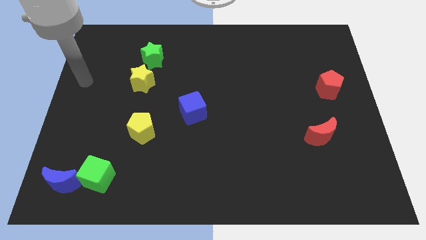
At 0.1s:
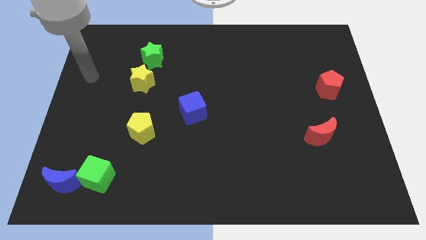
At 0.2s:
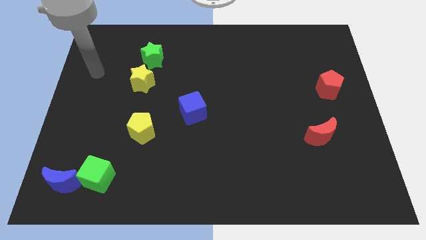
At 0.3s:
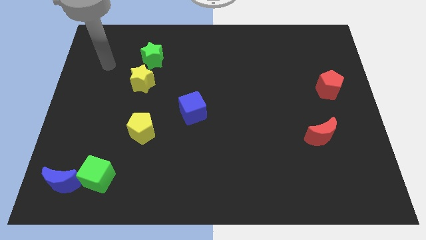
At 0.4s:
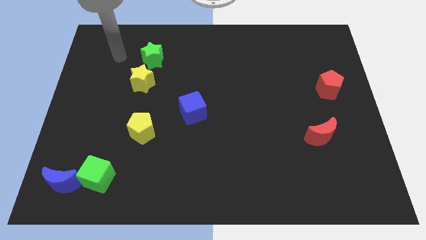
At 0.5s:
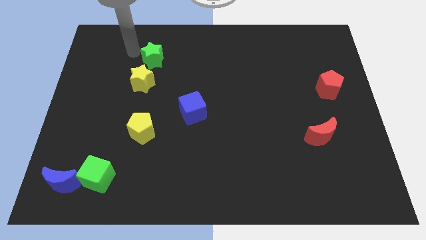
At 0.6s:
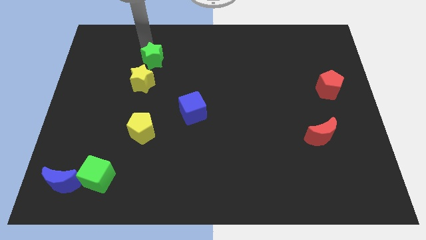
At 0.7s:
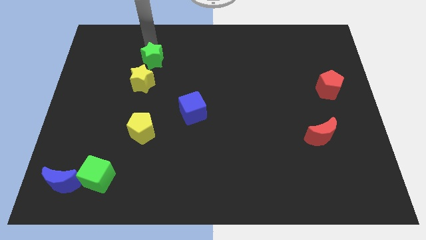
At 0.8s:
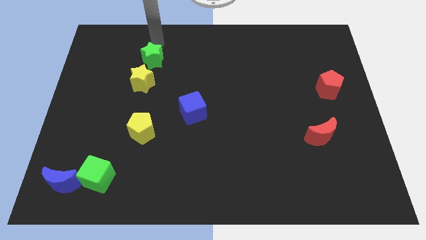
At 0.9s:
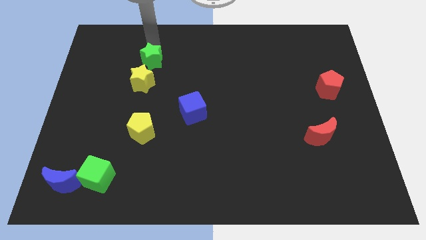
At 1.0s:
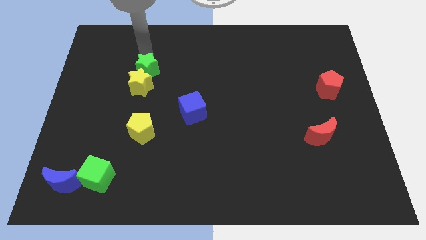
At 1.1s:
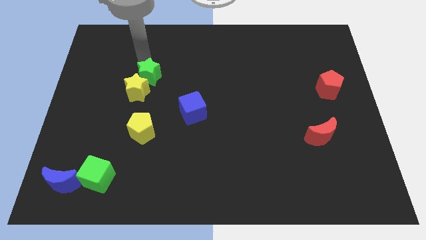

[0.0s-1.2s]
push the green star into the yellow star

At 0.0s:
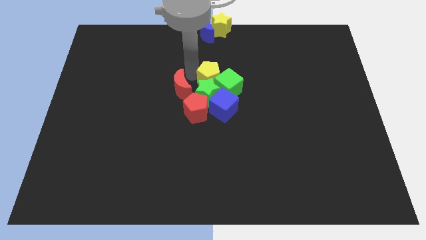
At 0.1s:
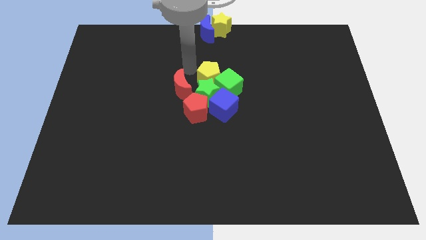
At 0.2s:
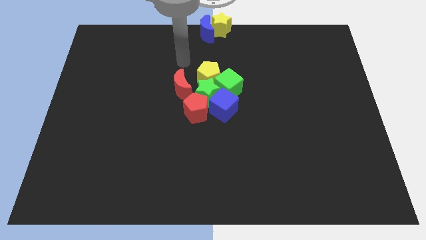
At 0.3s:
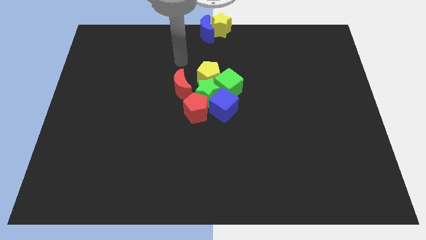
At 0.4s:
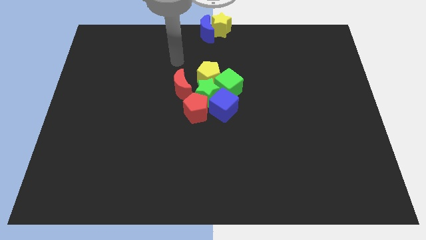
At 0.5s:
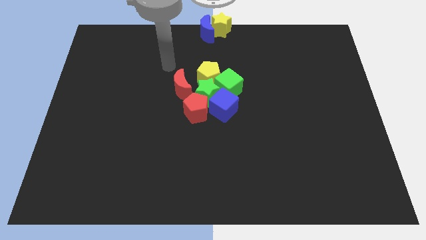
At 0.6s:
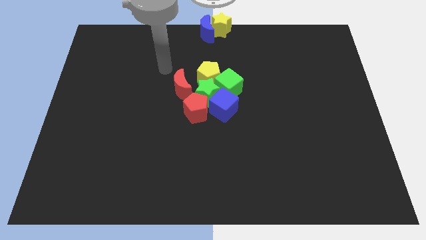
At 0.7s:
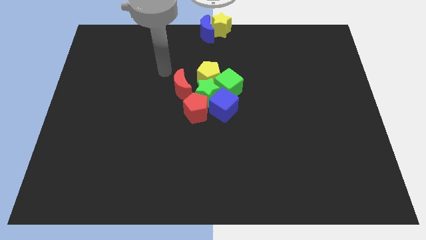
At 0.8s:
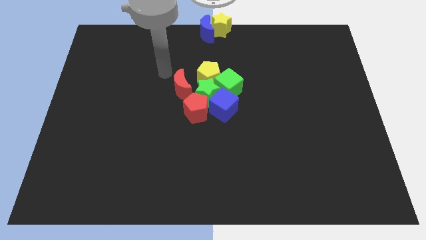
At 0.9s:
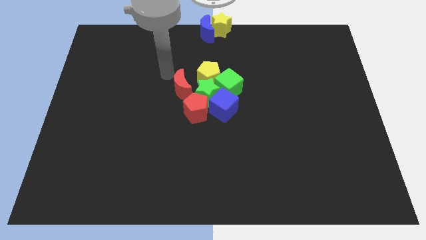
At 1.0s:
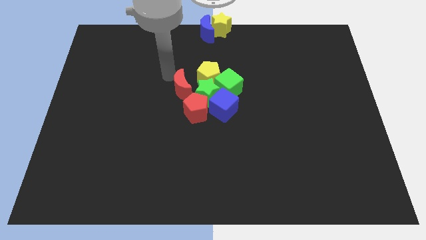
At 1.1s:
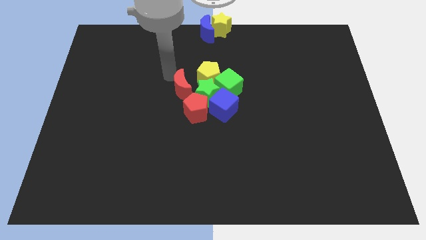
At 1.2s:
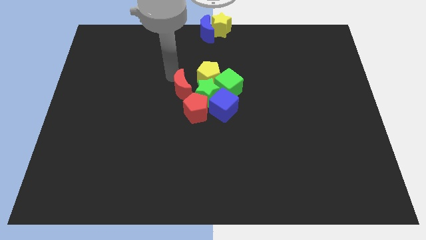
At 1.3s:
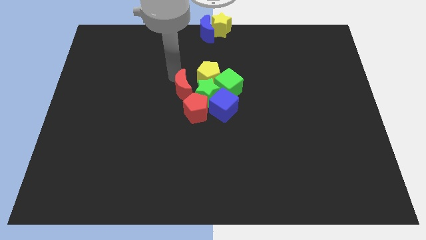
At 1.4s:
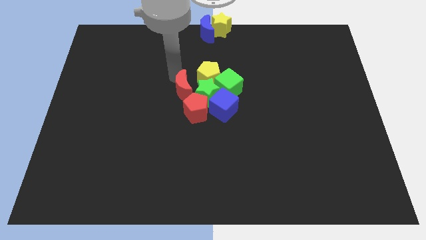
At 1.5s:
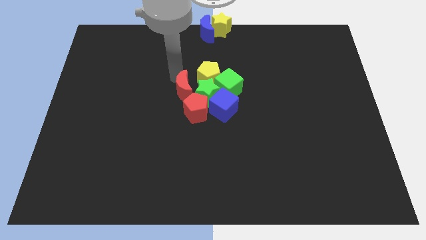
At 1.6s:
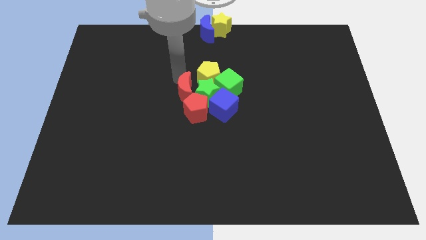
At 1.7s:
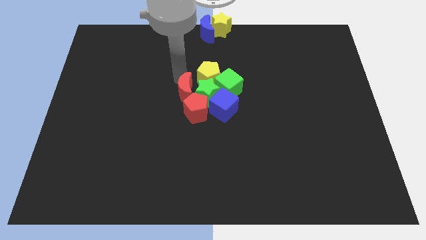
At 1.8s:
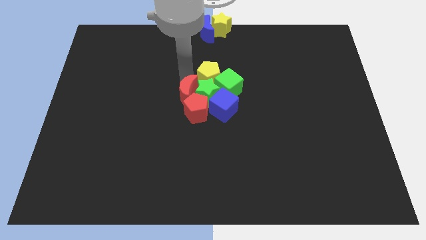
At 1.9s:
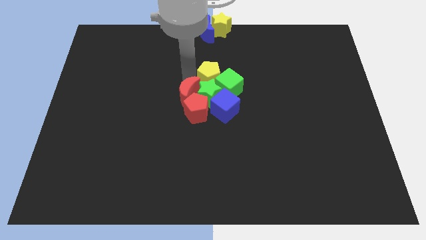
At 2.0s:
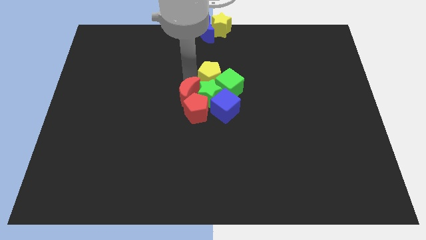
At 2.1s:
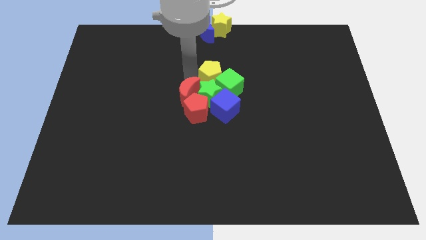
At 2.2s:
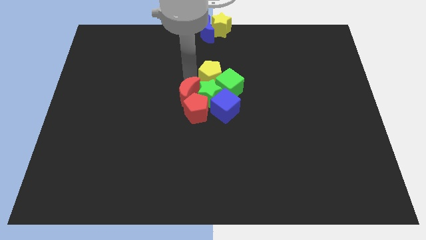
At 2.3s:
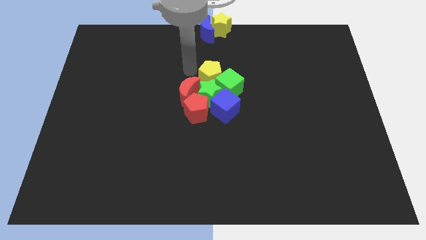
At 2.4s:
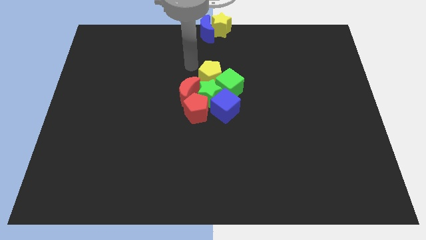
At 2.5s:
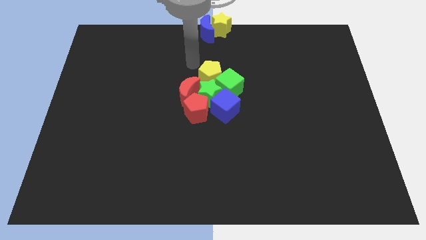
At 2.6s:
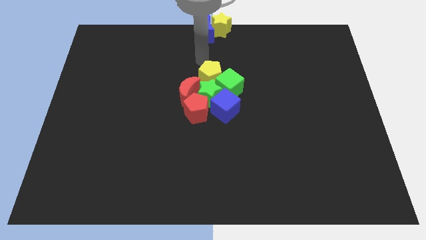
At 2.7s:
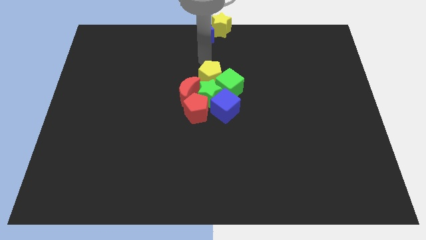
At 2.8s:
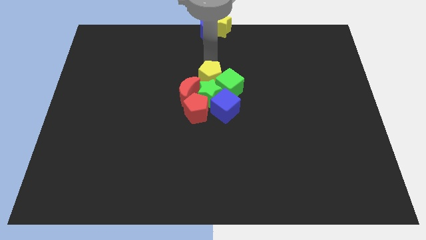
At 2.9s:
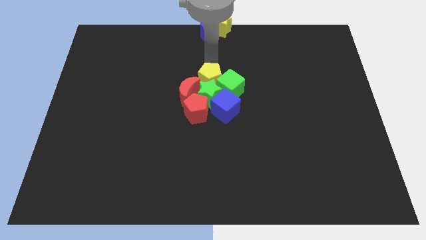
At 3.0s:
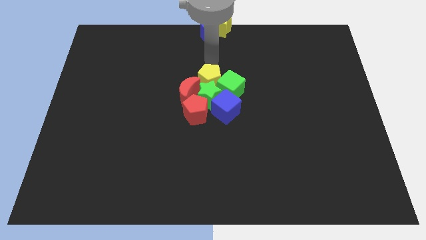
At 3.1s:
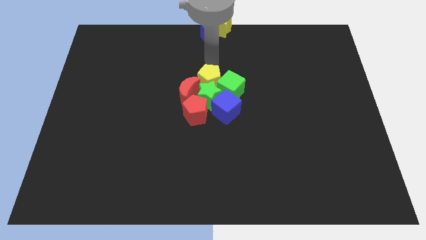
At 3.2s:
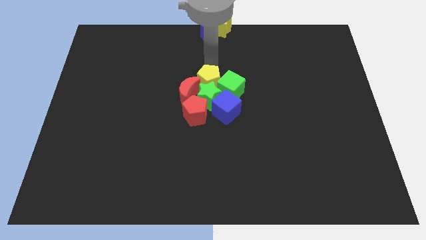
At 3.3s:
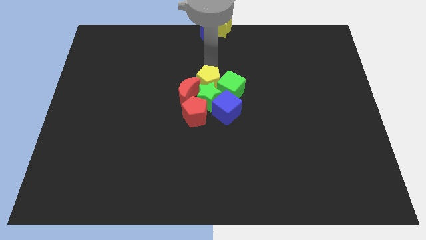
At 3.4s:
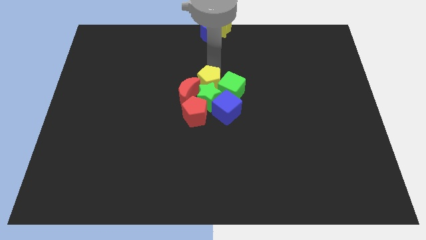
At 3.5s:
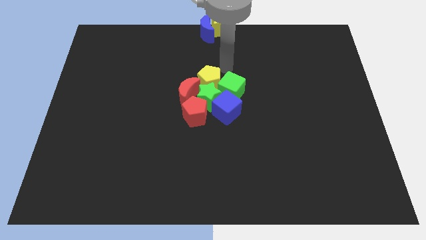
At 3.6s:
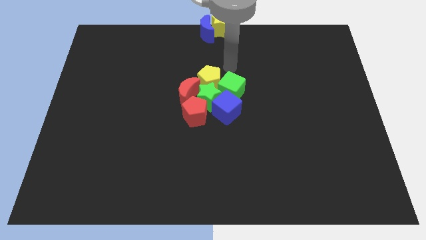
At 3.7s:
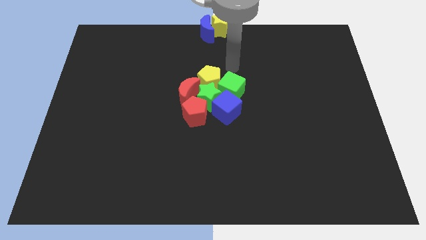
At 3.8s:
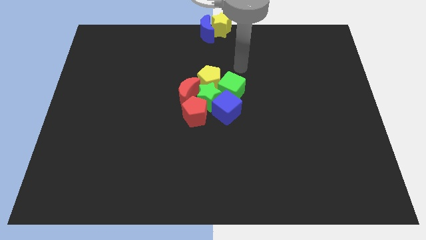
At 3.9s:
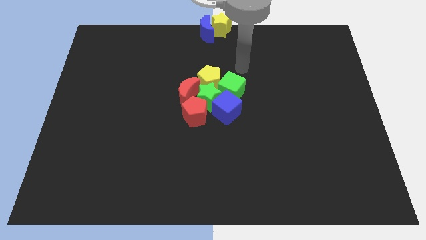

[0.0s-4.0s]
adjust the red crescent and yellow pentagon close to the green star

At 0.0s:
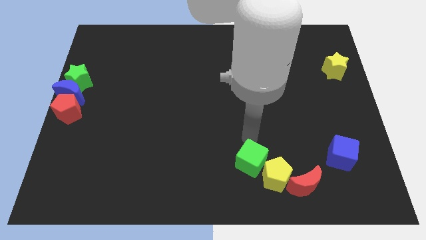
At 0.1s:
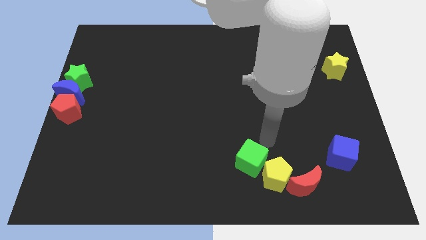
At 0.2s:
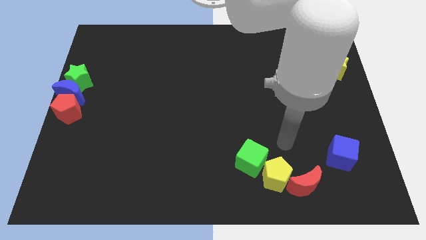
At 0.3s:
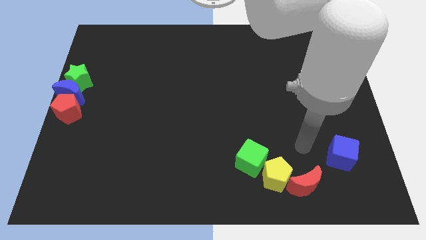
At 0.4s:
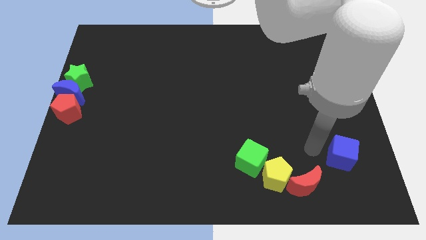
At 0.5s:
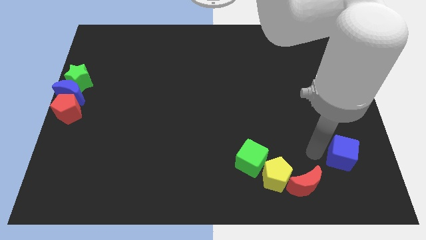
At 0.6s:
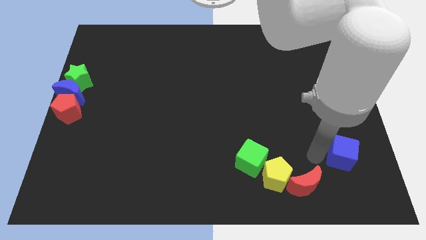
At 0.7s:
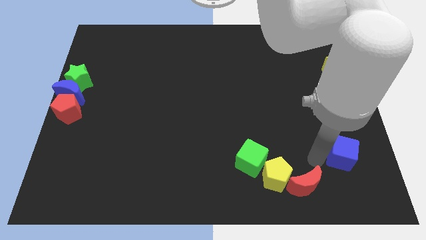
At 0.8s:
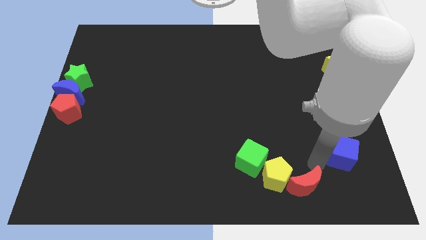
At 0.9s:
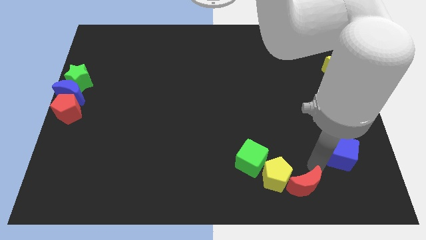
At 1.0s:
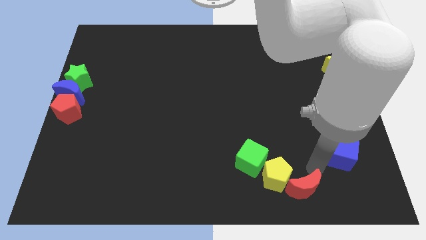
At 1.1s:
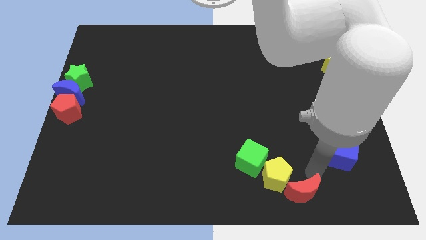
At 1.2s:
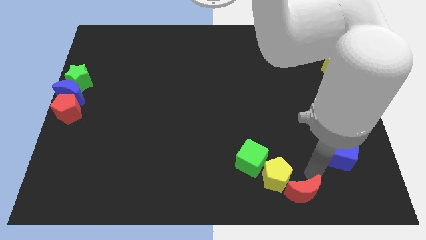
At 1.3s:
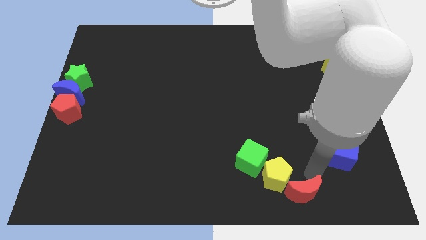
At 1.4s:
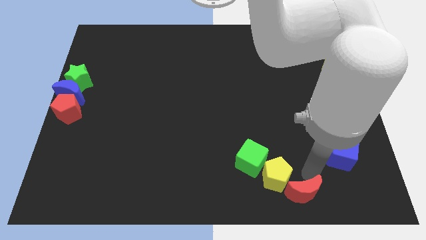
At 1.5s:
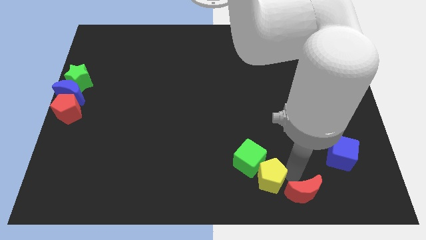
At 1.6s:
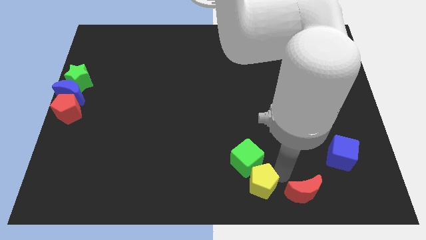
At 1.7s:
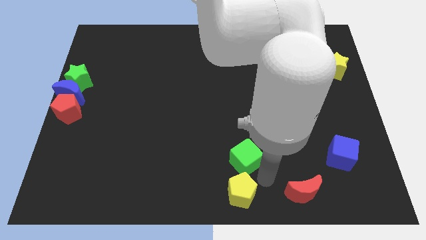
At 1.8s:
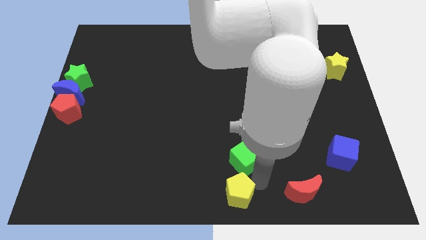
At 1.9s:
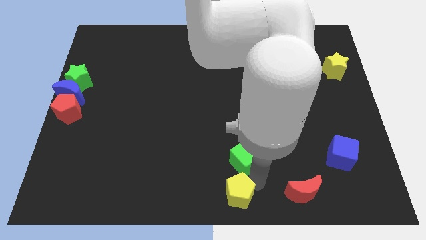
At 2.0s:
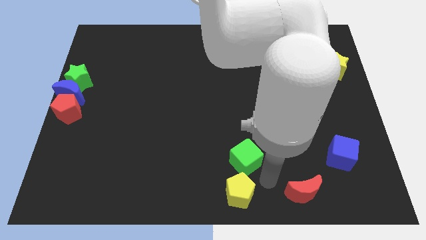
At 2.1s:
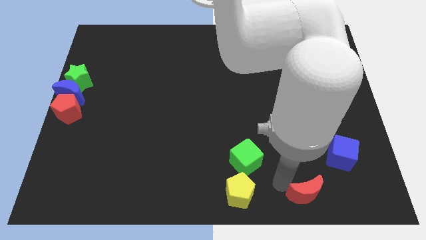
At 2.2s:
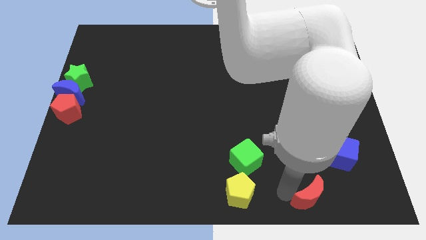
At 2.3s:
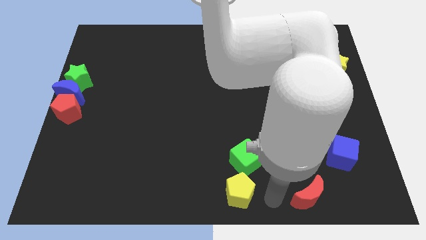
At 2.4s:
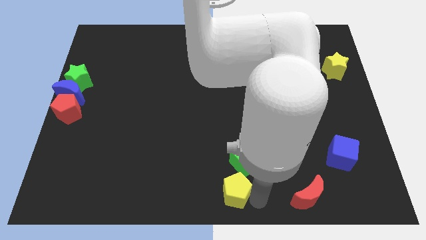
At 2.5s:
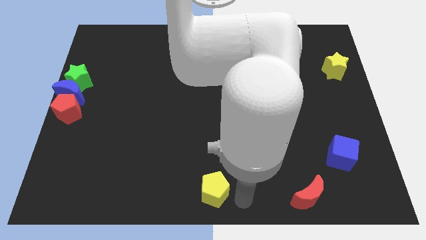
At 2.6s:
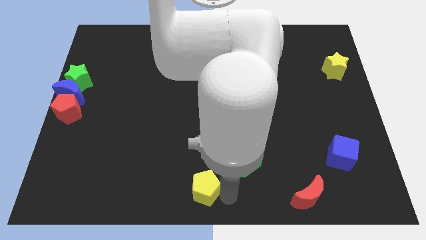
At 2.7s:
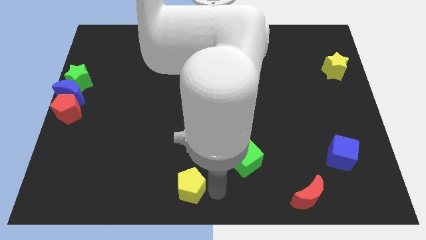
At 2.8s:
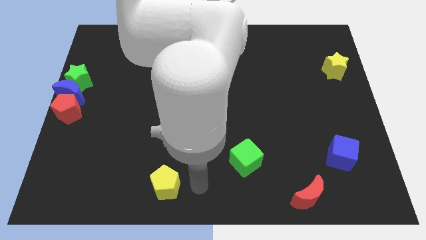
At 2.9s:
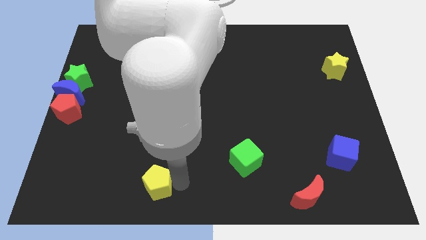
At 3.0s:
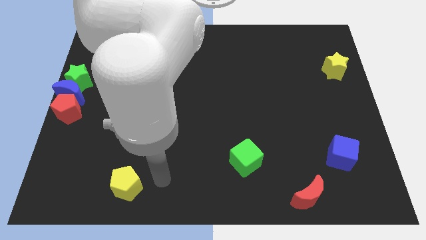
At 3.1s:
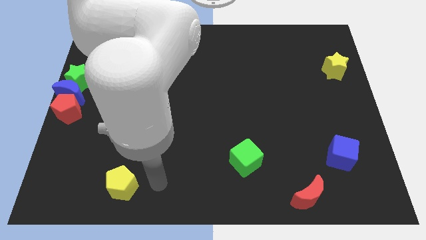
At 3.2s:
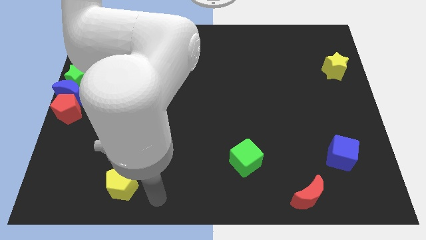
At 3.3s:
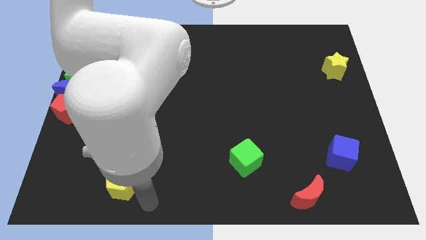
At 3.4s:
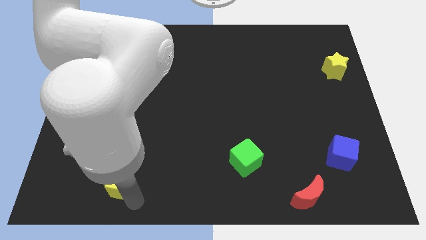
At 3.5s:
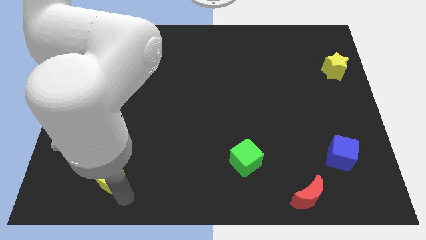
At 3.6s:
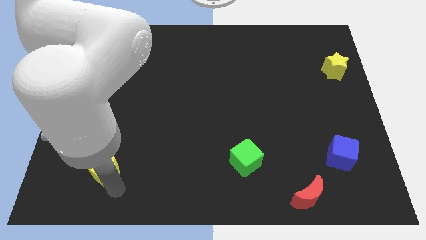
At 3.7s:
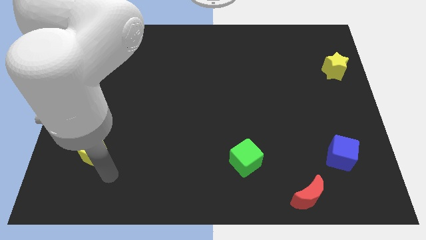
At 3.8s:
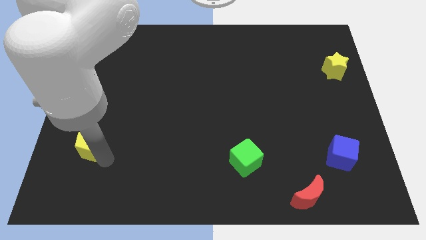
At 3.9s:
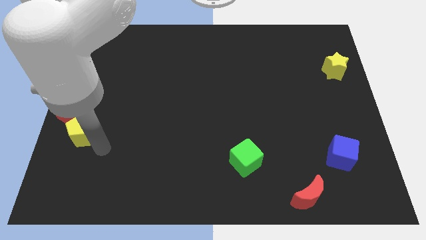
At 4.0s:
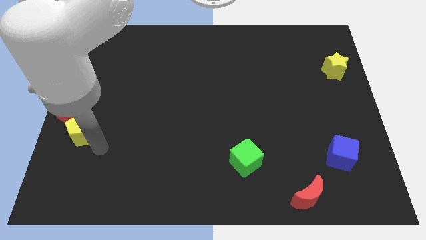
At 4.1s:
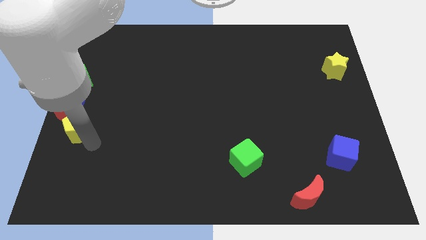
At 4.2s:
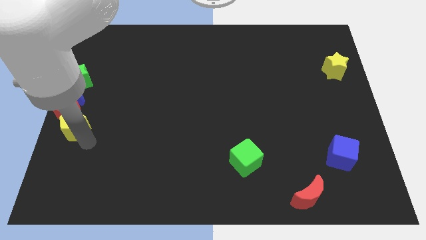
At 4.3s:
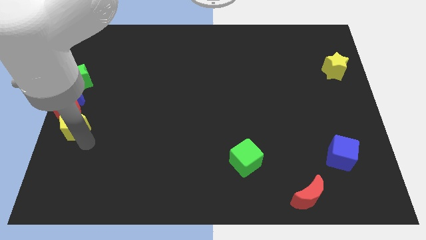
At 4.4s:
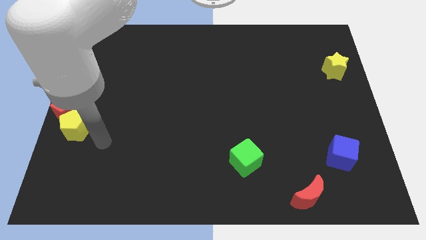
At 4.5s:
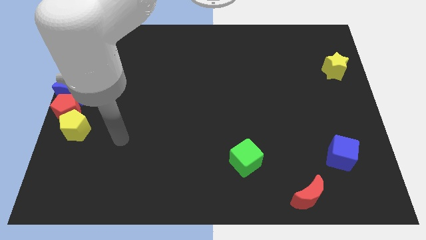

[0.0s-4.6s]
push the yellow pentagon diagonally to the bottom right of the red pentagon
